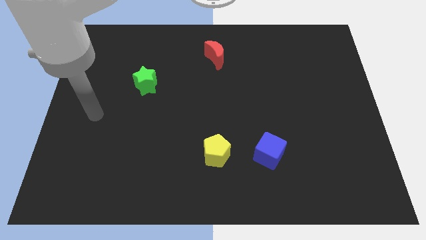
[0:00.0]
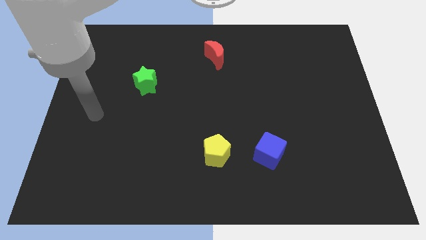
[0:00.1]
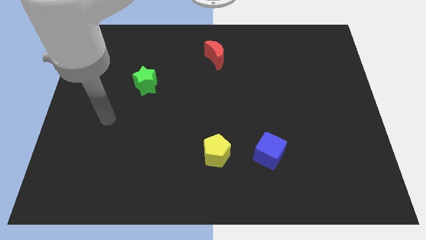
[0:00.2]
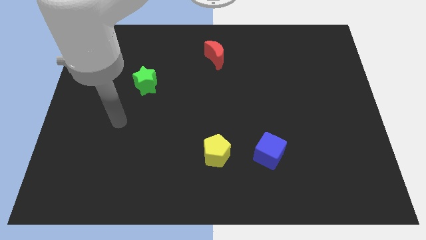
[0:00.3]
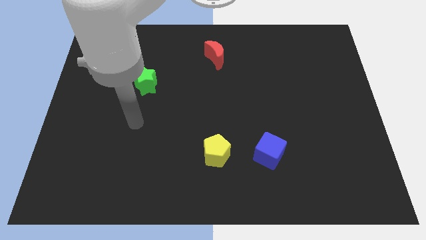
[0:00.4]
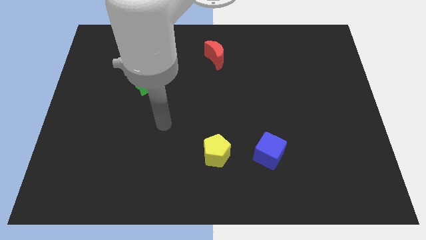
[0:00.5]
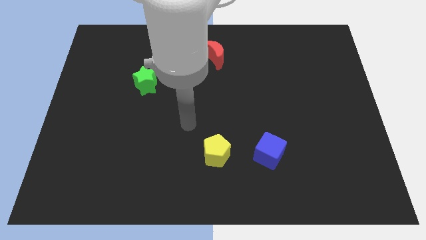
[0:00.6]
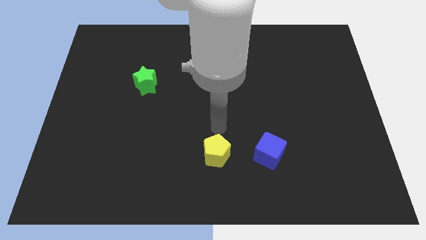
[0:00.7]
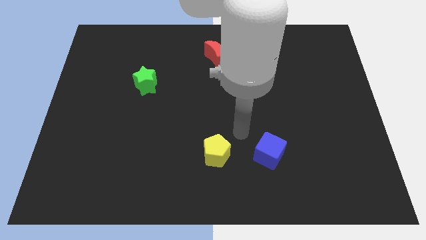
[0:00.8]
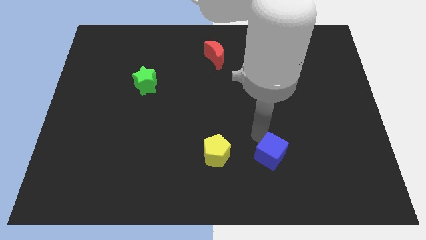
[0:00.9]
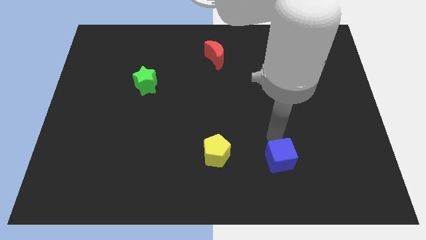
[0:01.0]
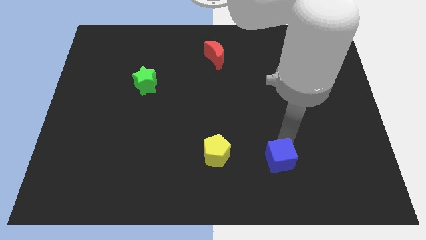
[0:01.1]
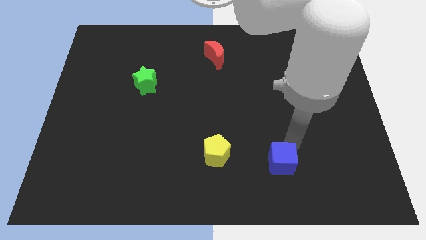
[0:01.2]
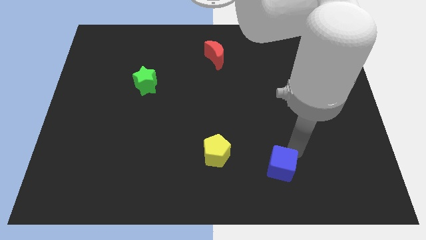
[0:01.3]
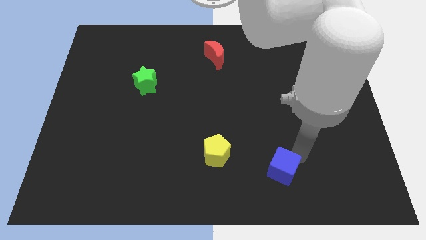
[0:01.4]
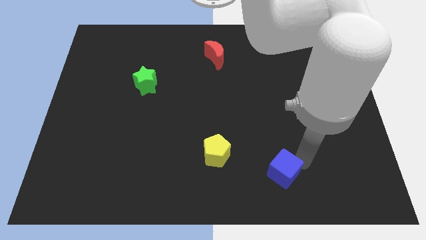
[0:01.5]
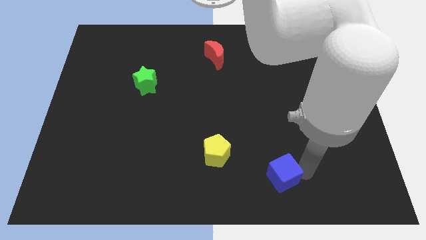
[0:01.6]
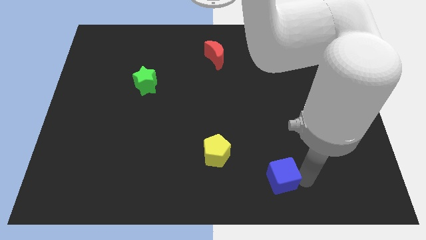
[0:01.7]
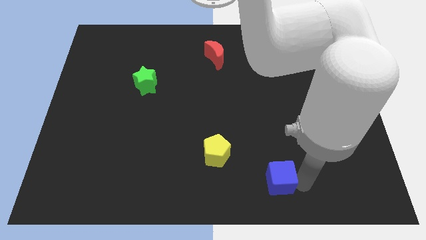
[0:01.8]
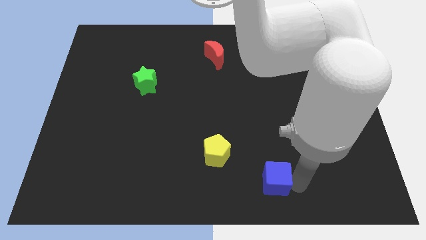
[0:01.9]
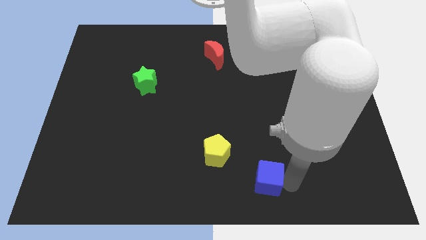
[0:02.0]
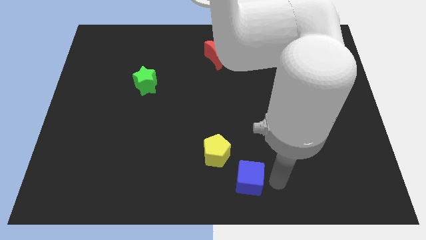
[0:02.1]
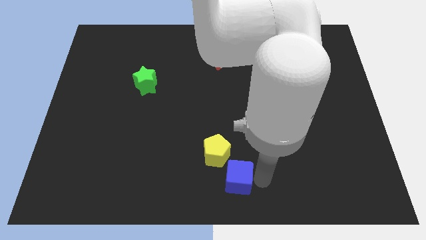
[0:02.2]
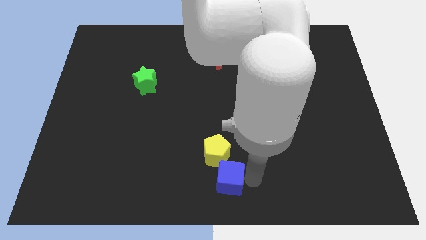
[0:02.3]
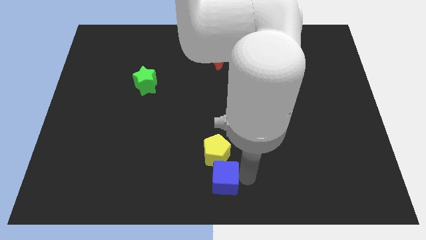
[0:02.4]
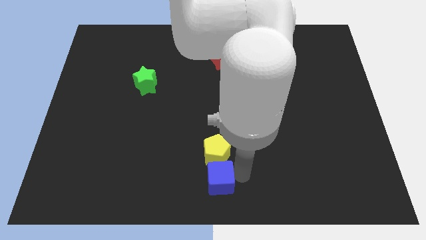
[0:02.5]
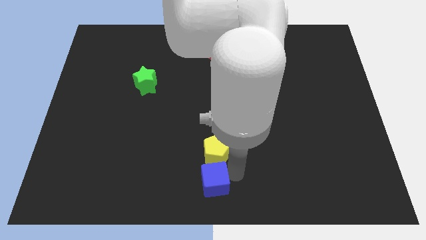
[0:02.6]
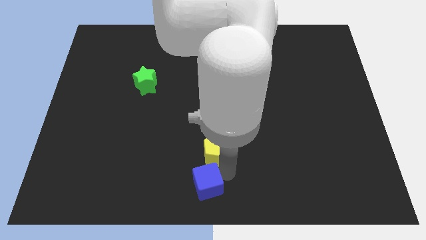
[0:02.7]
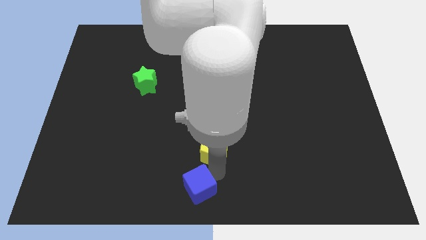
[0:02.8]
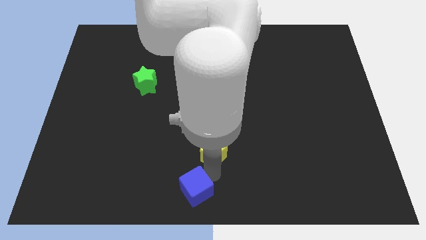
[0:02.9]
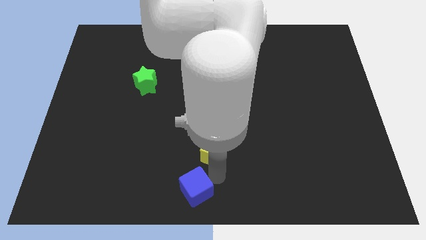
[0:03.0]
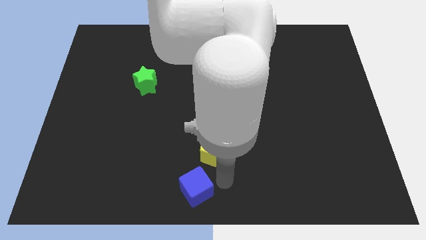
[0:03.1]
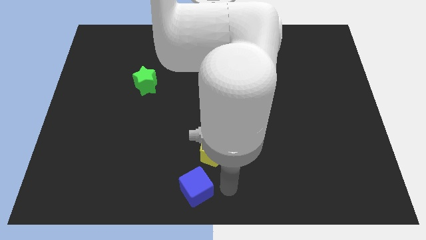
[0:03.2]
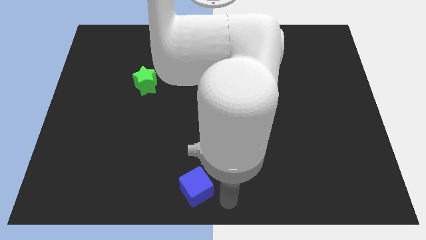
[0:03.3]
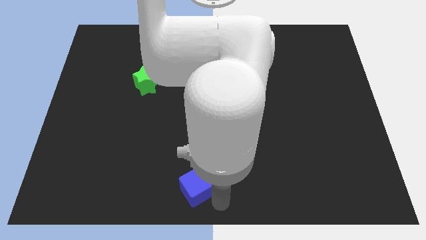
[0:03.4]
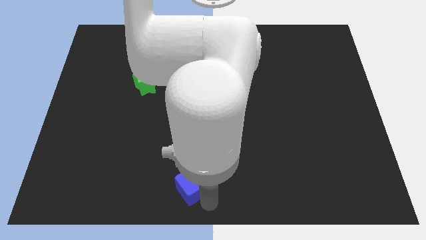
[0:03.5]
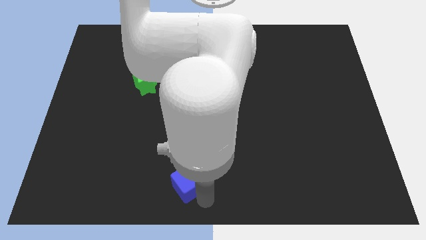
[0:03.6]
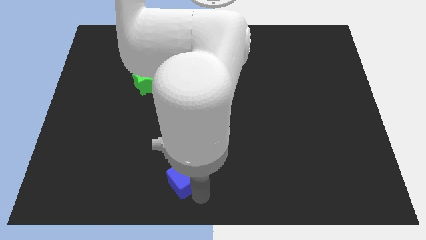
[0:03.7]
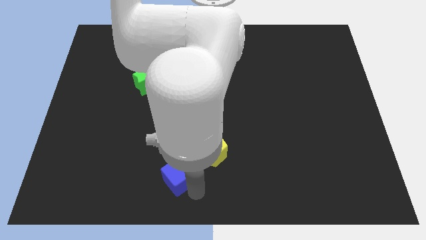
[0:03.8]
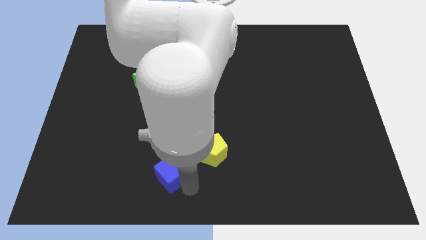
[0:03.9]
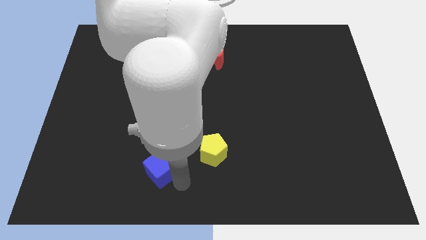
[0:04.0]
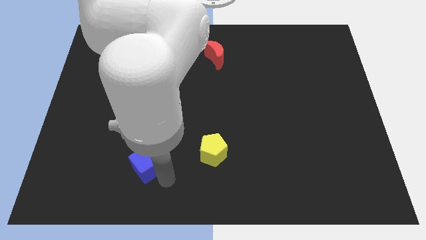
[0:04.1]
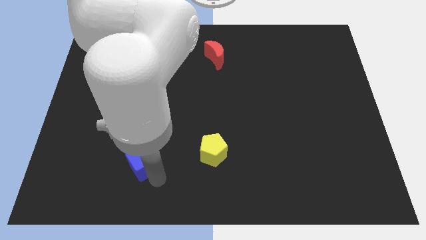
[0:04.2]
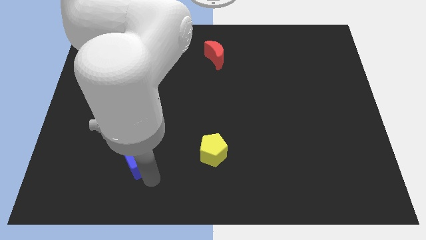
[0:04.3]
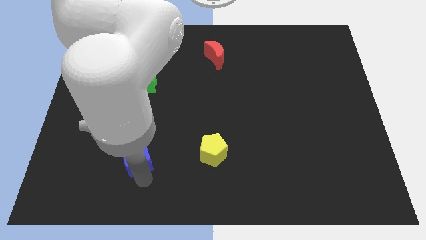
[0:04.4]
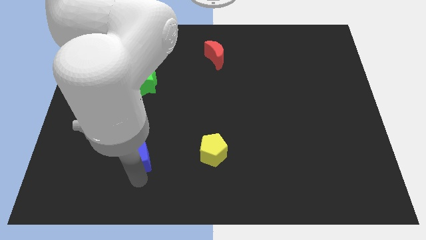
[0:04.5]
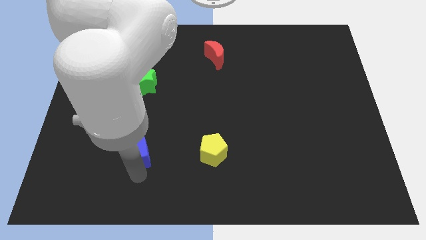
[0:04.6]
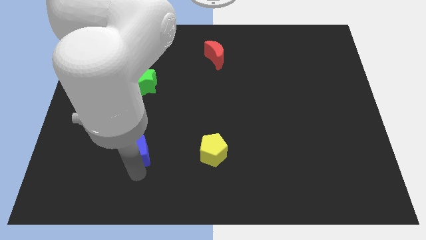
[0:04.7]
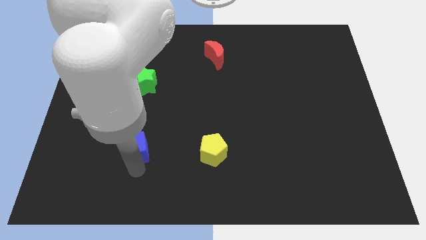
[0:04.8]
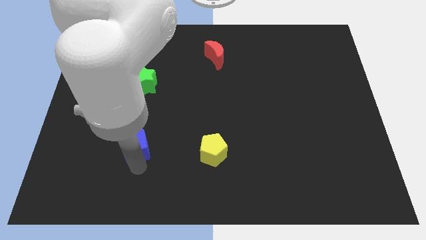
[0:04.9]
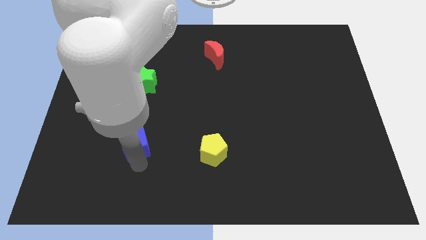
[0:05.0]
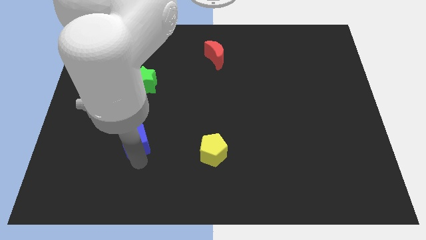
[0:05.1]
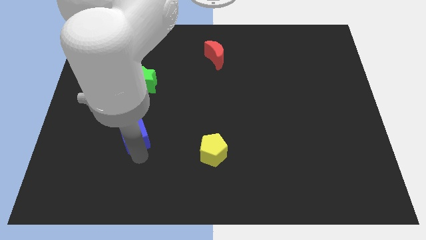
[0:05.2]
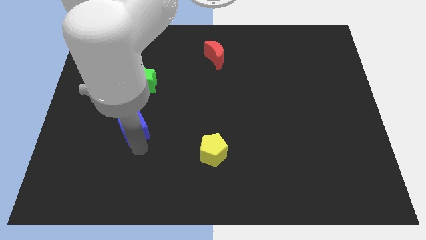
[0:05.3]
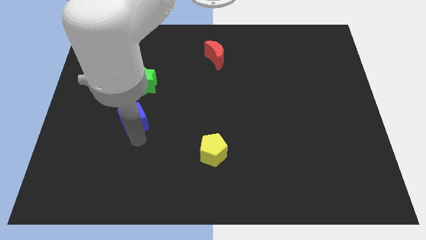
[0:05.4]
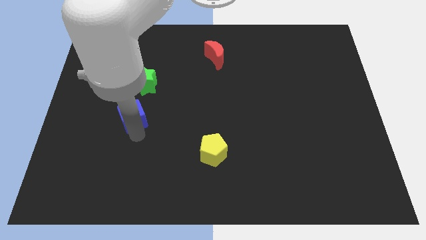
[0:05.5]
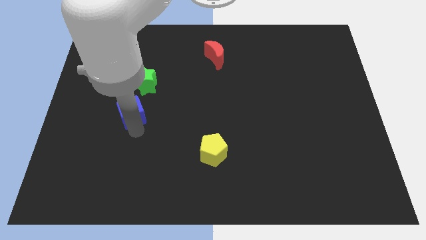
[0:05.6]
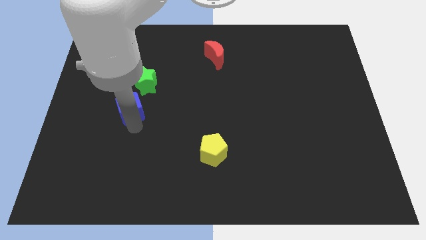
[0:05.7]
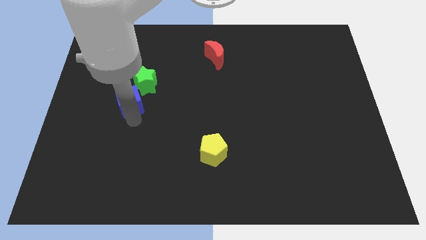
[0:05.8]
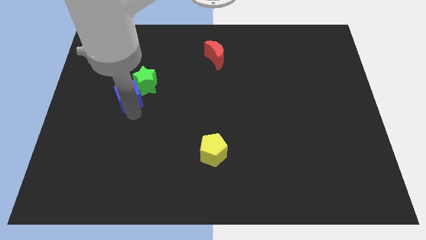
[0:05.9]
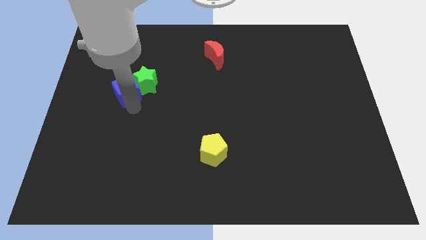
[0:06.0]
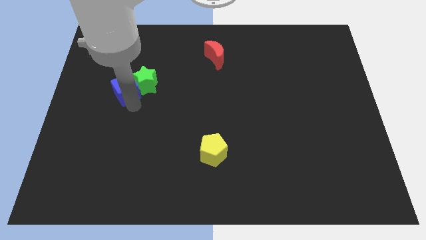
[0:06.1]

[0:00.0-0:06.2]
move the cube to the green block

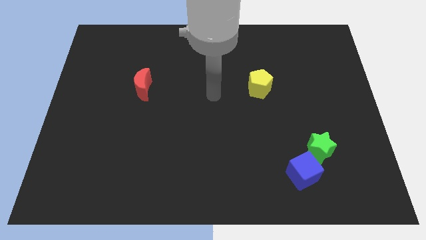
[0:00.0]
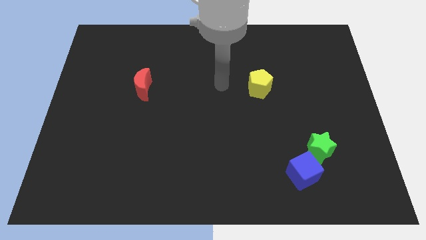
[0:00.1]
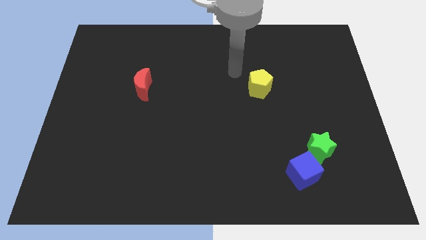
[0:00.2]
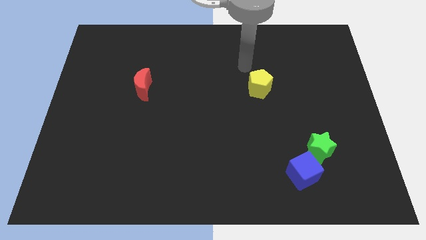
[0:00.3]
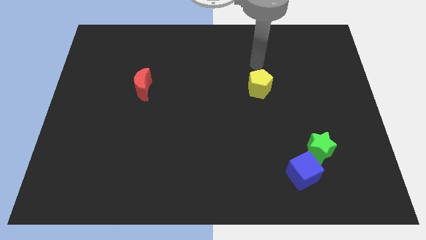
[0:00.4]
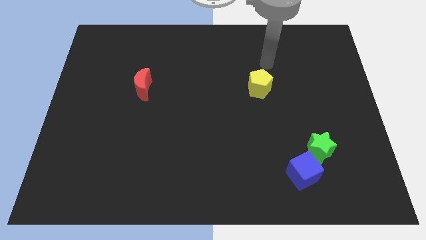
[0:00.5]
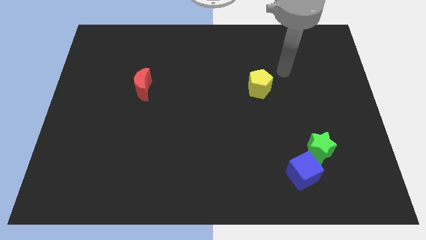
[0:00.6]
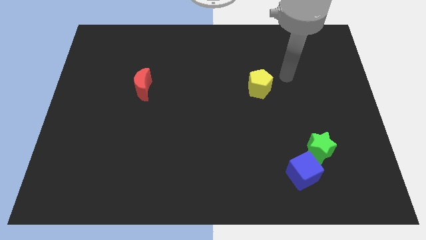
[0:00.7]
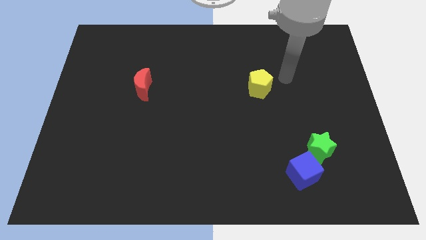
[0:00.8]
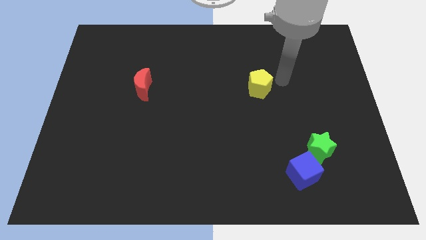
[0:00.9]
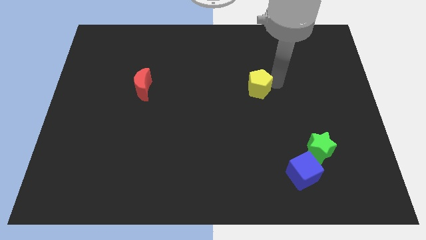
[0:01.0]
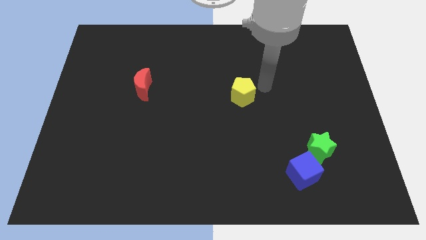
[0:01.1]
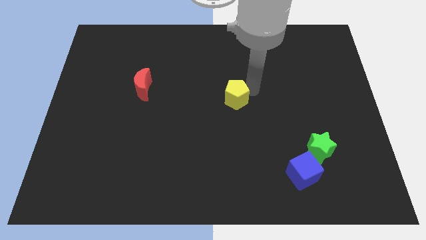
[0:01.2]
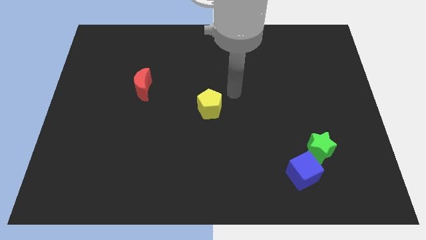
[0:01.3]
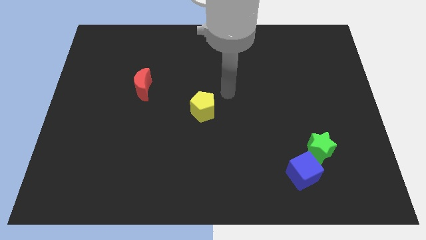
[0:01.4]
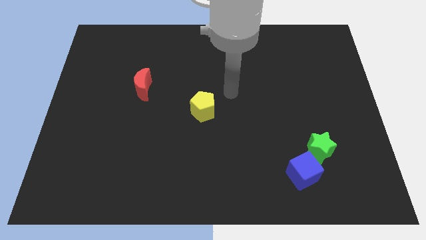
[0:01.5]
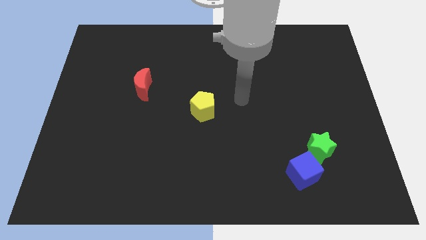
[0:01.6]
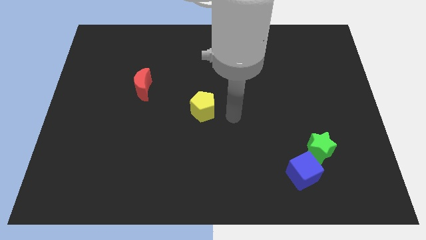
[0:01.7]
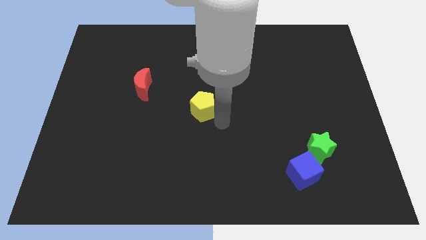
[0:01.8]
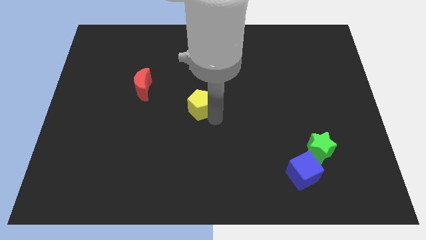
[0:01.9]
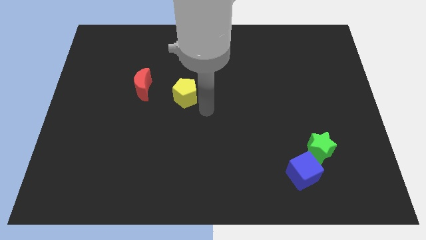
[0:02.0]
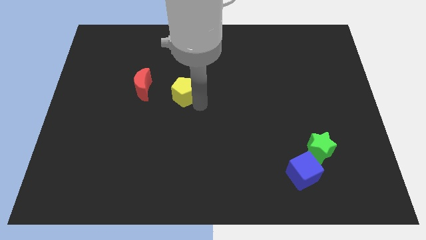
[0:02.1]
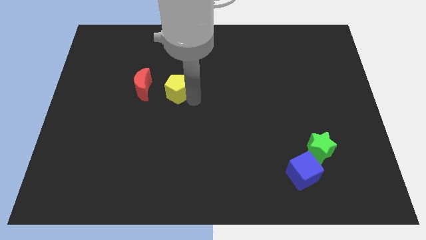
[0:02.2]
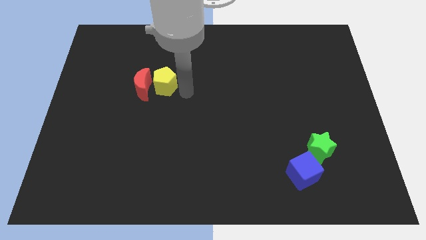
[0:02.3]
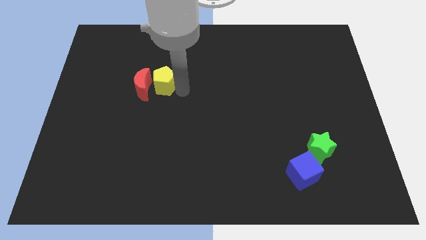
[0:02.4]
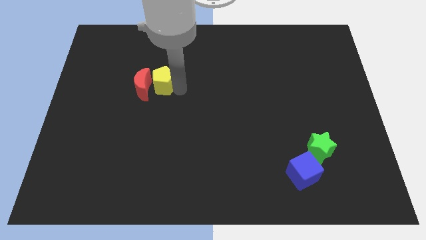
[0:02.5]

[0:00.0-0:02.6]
push the yellow pentagon close to the red block
